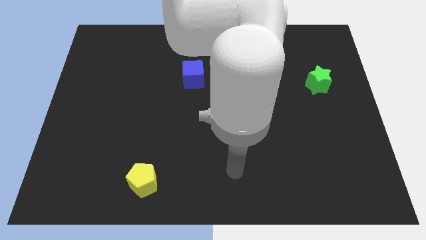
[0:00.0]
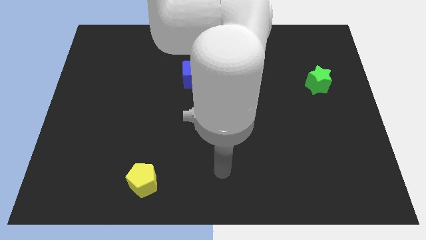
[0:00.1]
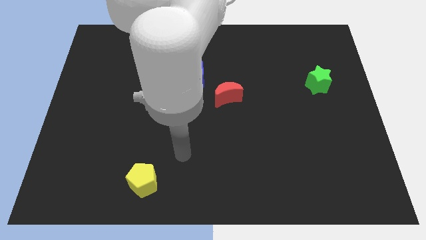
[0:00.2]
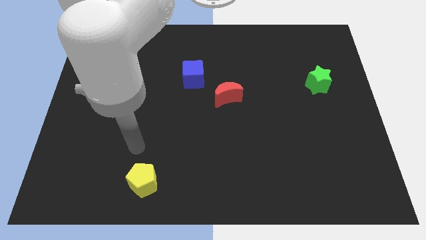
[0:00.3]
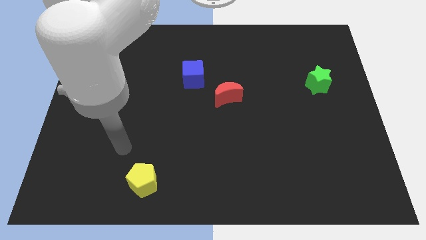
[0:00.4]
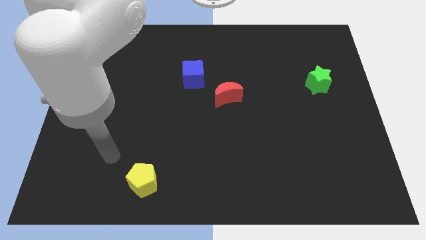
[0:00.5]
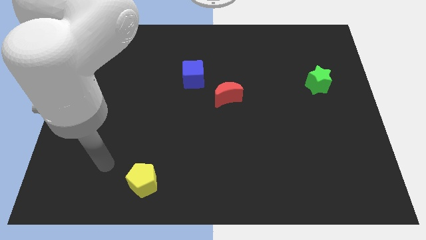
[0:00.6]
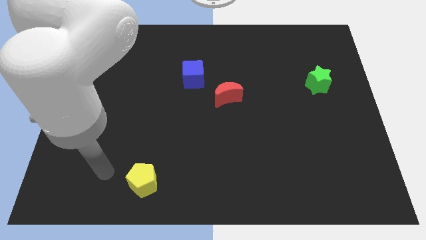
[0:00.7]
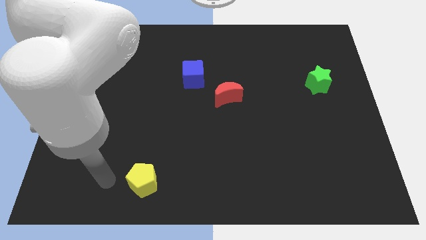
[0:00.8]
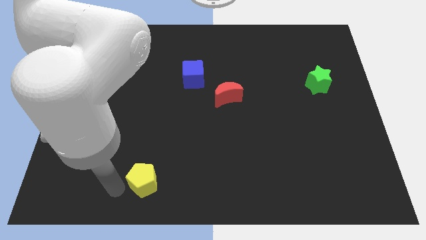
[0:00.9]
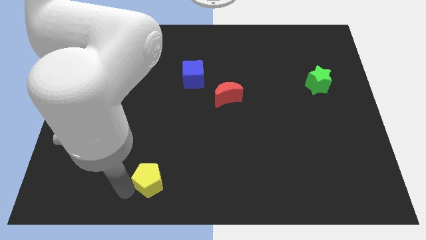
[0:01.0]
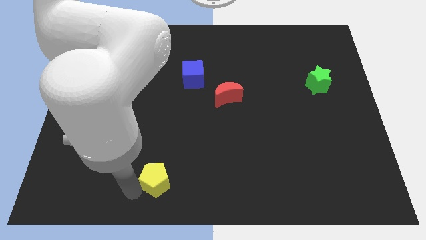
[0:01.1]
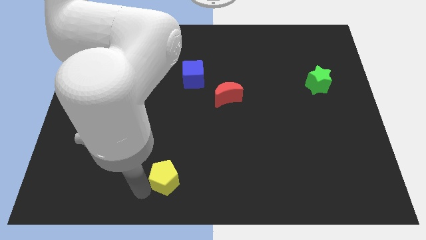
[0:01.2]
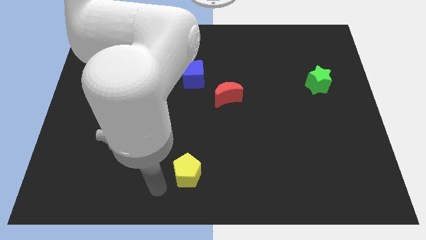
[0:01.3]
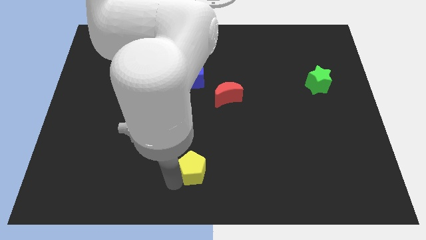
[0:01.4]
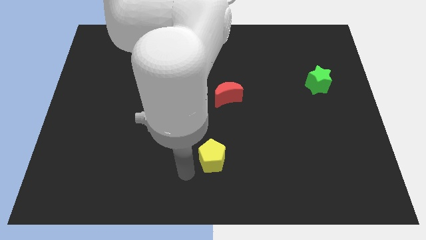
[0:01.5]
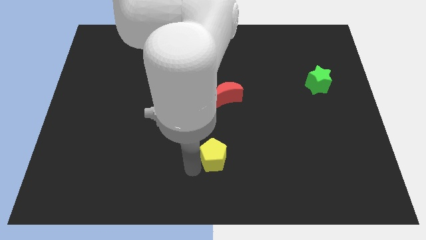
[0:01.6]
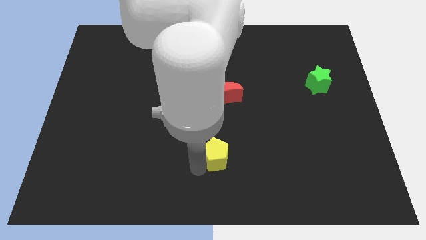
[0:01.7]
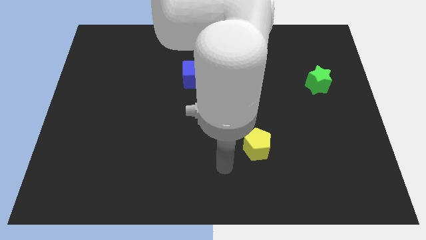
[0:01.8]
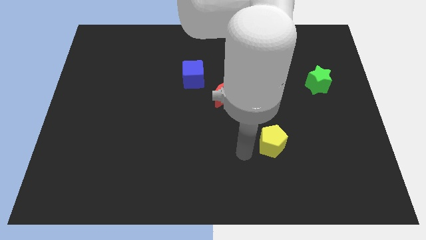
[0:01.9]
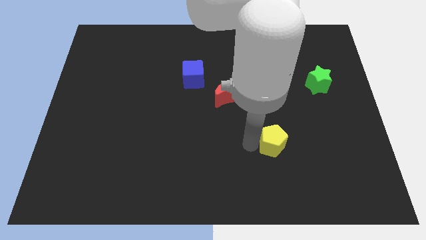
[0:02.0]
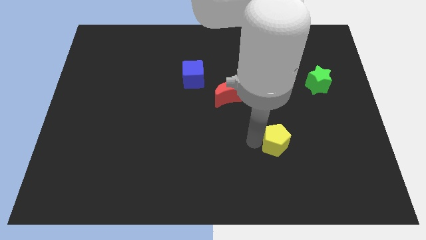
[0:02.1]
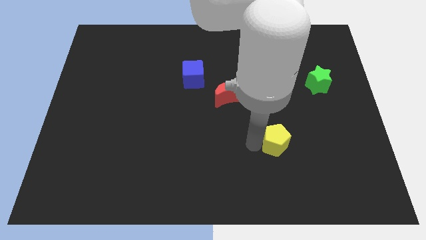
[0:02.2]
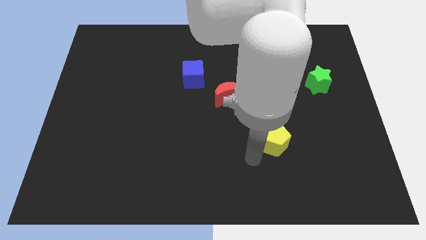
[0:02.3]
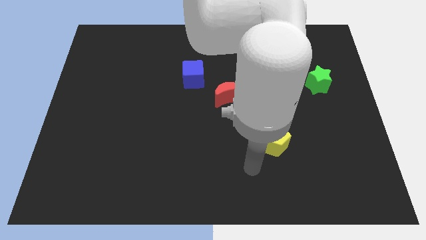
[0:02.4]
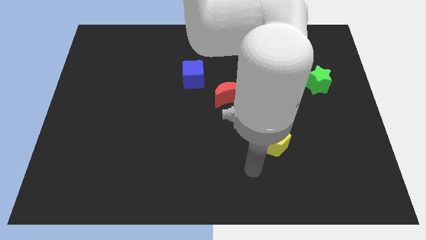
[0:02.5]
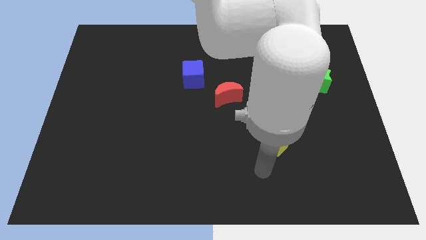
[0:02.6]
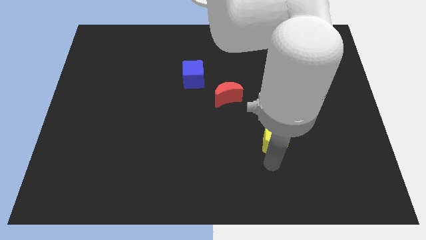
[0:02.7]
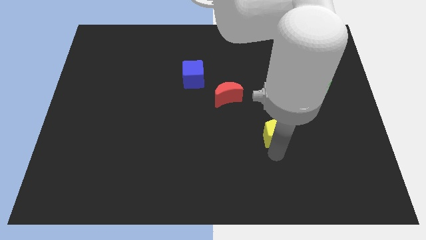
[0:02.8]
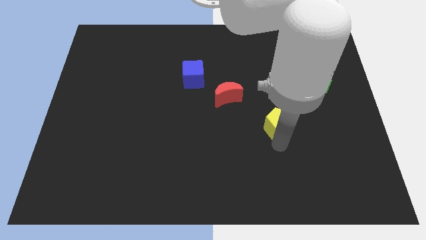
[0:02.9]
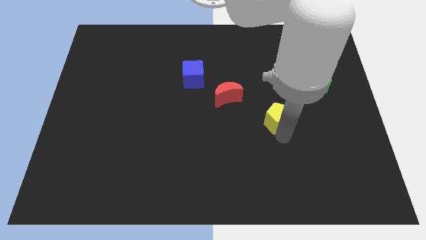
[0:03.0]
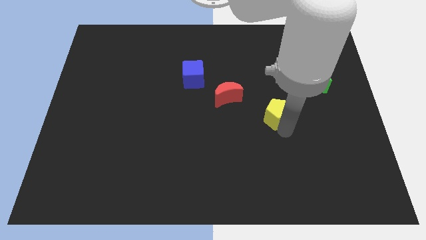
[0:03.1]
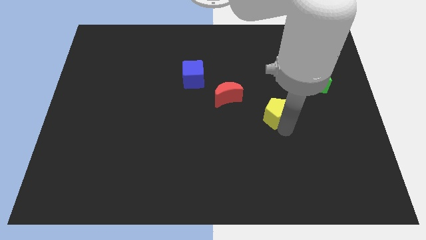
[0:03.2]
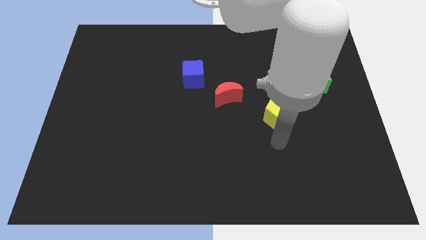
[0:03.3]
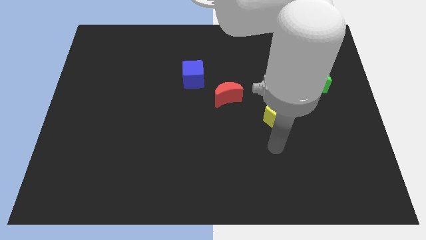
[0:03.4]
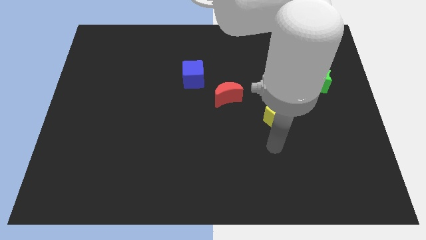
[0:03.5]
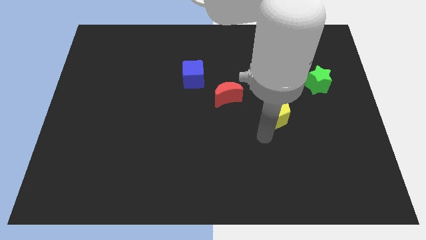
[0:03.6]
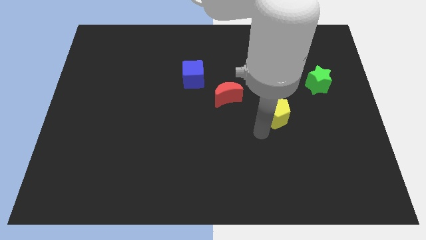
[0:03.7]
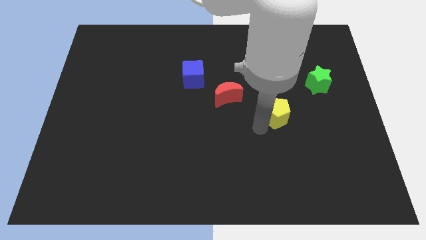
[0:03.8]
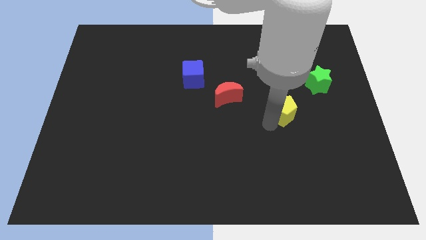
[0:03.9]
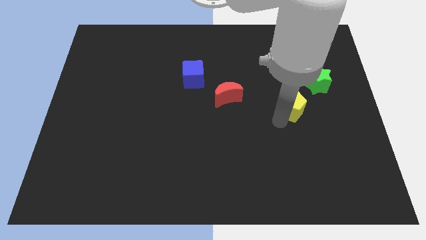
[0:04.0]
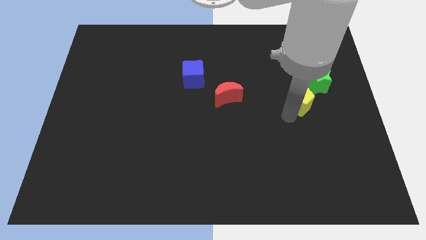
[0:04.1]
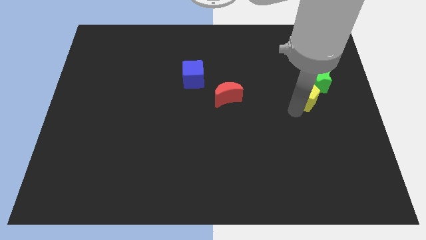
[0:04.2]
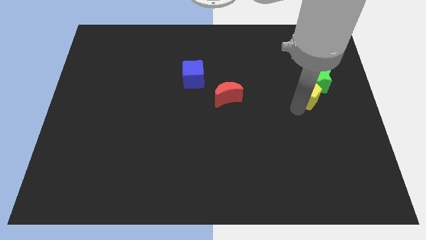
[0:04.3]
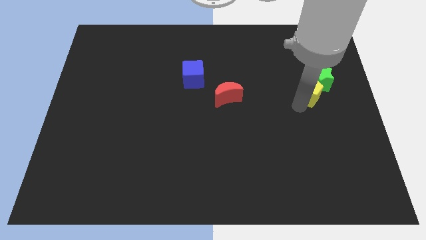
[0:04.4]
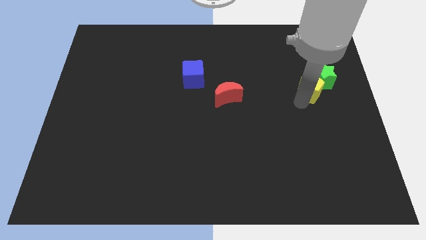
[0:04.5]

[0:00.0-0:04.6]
push the pentagon close to the green block

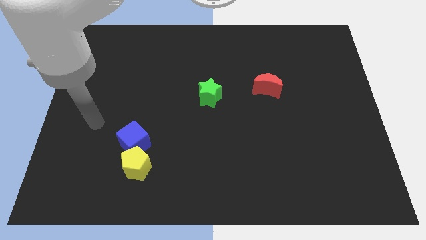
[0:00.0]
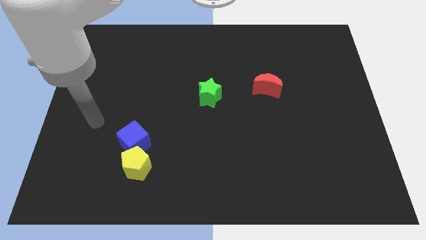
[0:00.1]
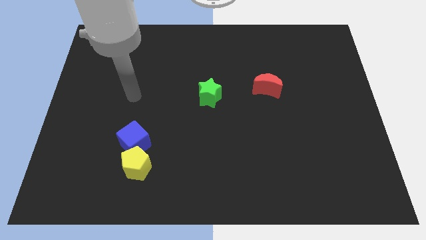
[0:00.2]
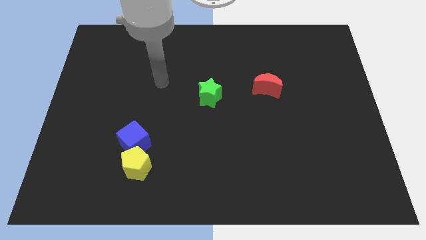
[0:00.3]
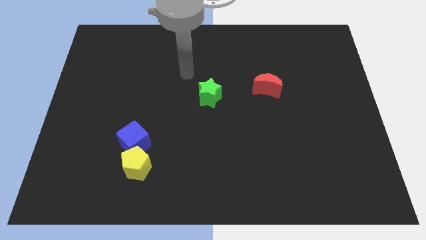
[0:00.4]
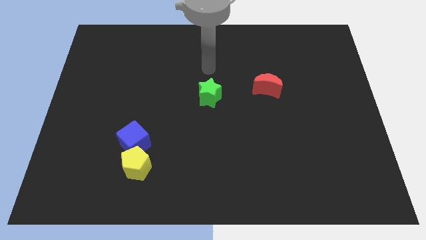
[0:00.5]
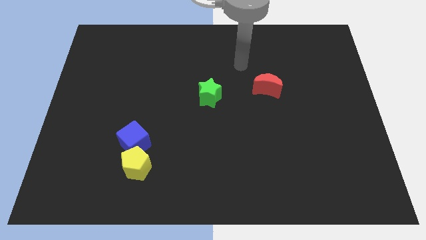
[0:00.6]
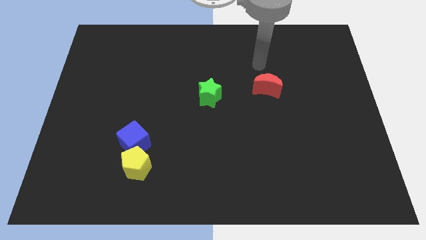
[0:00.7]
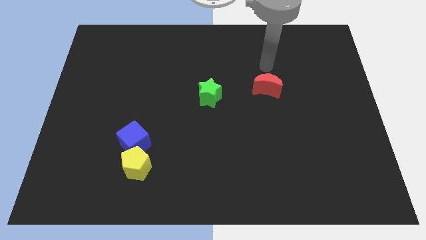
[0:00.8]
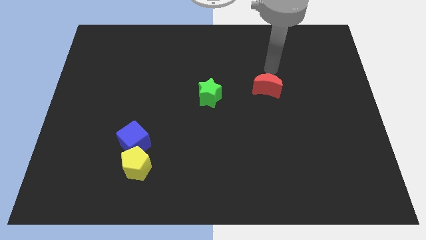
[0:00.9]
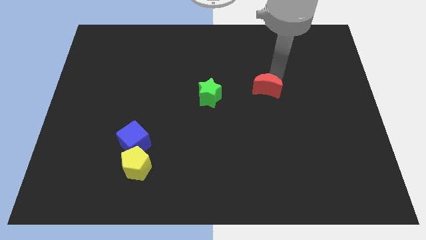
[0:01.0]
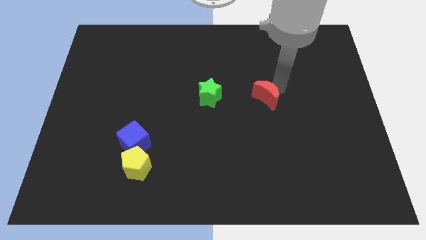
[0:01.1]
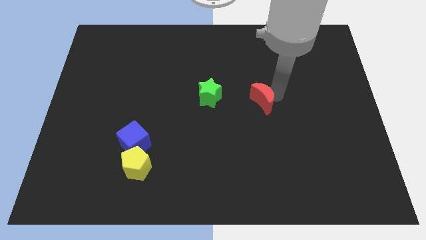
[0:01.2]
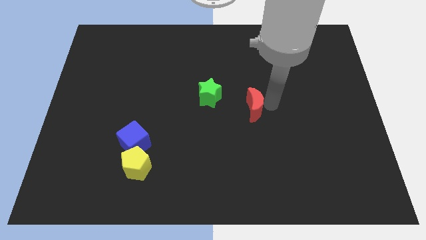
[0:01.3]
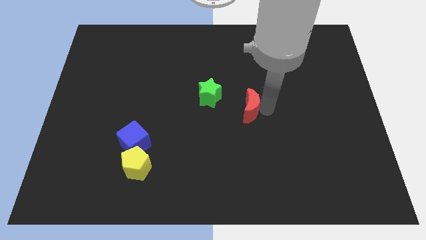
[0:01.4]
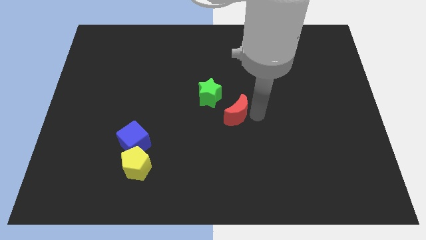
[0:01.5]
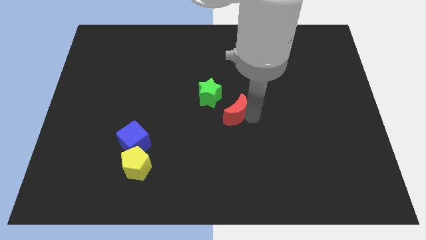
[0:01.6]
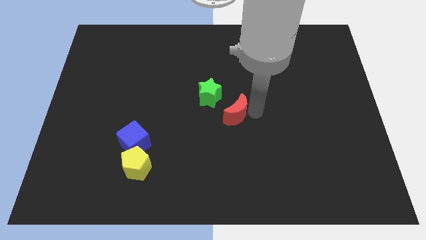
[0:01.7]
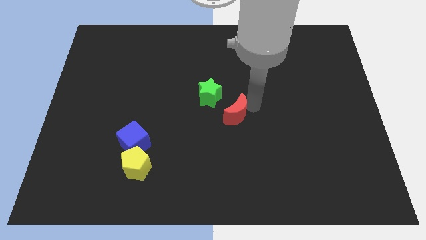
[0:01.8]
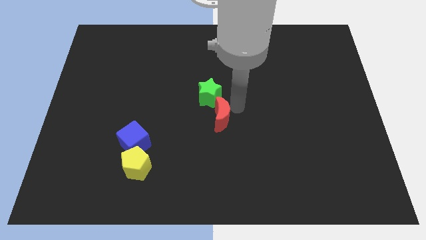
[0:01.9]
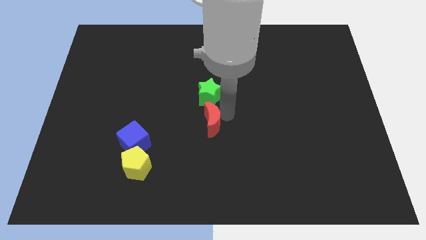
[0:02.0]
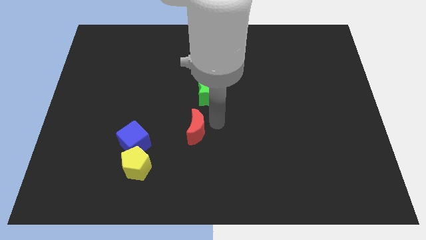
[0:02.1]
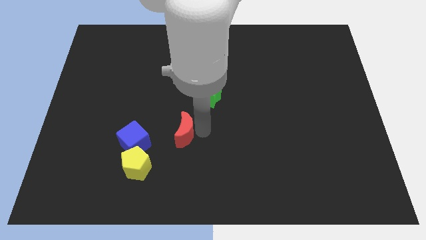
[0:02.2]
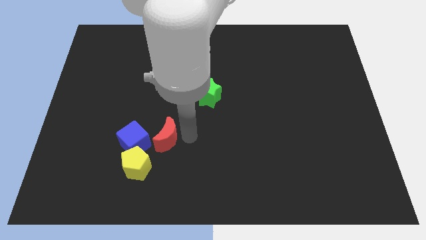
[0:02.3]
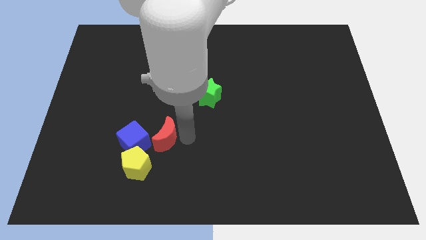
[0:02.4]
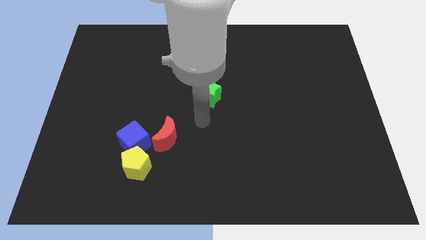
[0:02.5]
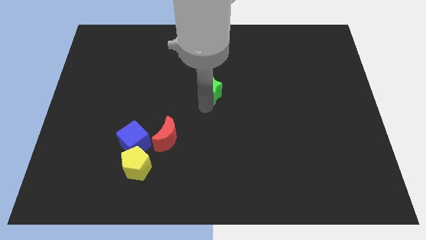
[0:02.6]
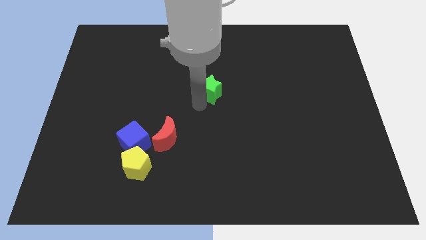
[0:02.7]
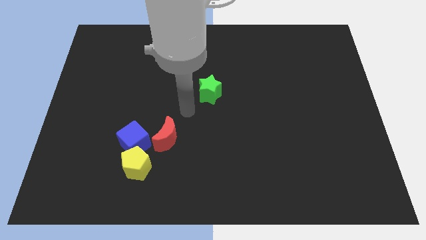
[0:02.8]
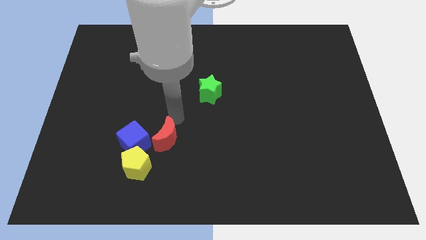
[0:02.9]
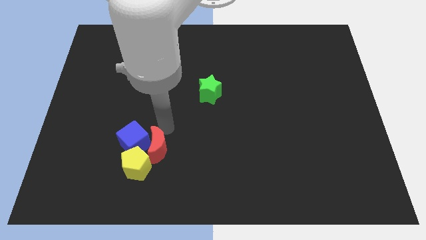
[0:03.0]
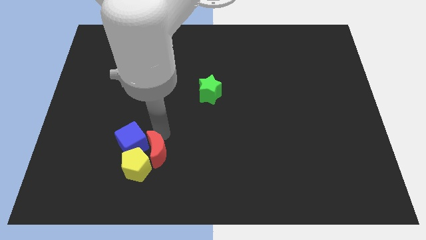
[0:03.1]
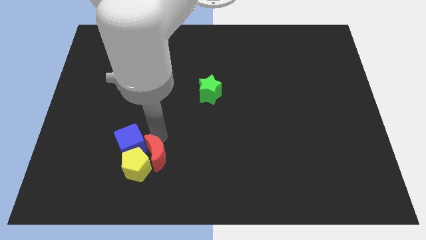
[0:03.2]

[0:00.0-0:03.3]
put the red moon to the pentagon

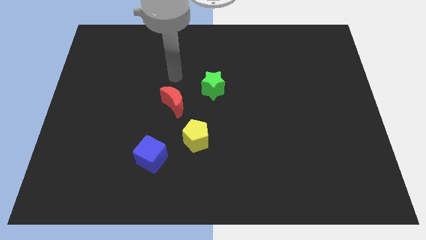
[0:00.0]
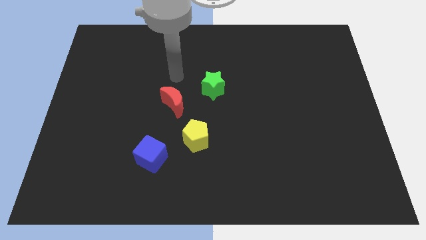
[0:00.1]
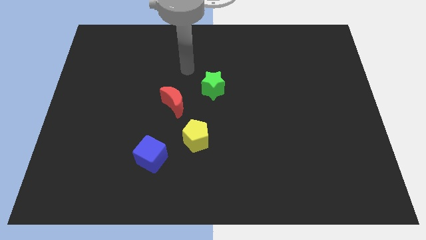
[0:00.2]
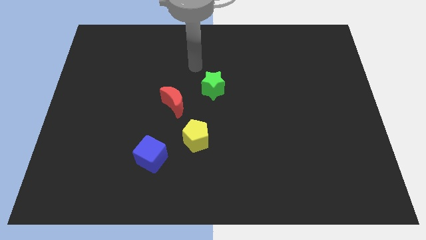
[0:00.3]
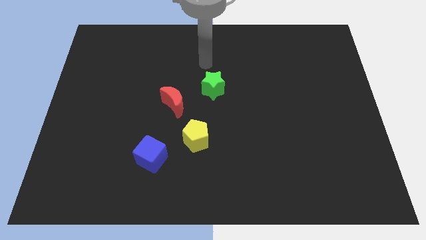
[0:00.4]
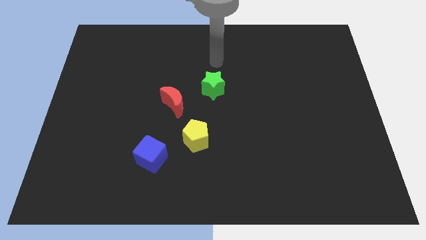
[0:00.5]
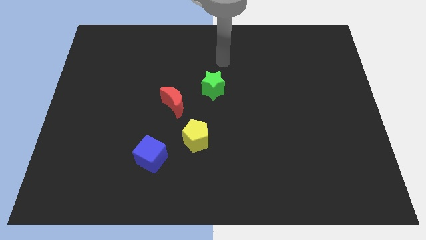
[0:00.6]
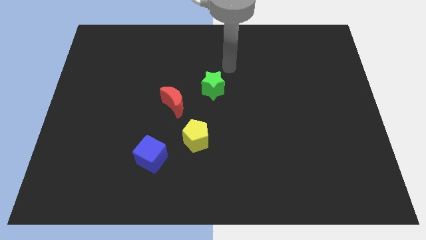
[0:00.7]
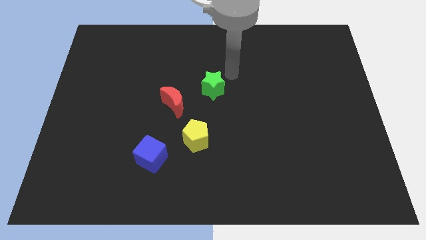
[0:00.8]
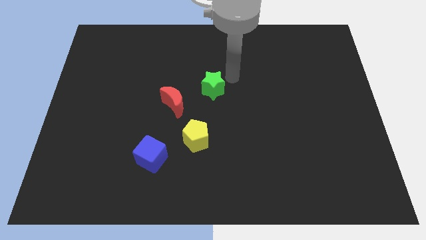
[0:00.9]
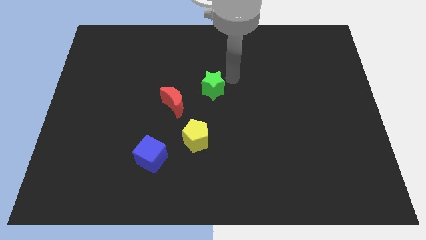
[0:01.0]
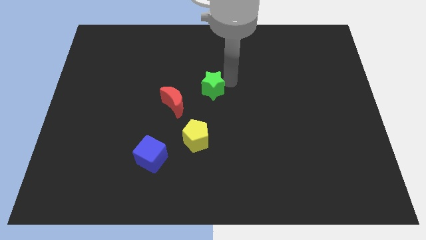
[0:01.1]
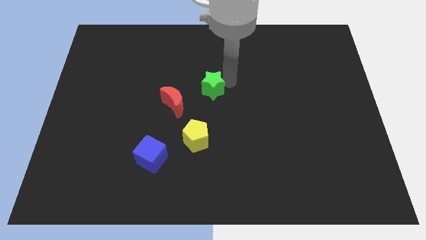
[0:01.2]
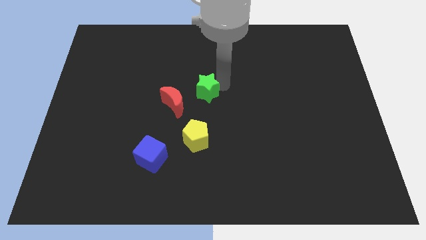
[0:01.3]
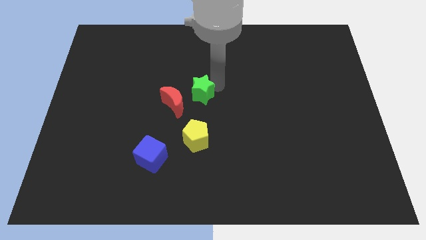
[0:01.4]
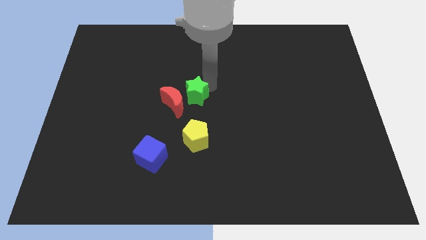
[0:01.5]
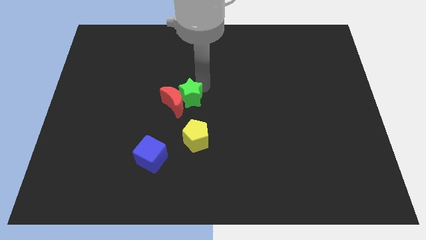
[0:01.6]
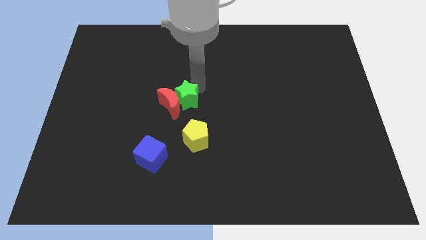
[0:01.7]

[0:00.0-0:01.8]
push the green star next to the moon
